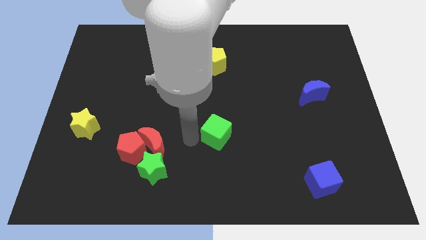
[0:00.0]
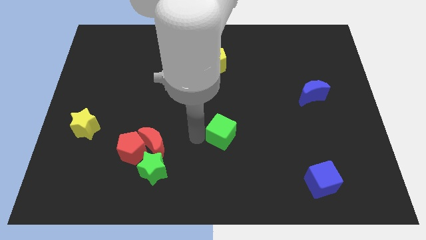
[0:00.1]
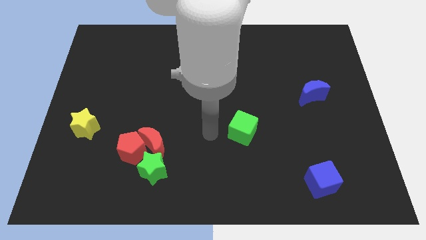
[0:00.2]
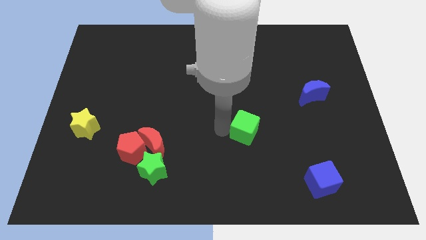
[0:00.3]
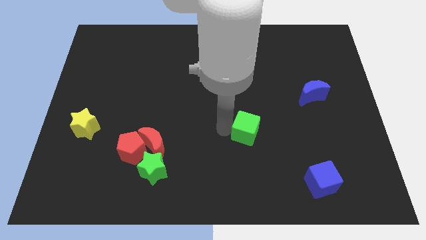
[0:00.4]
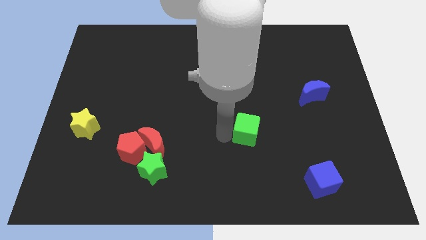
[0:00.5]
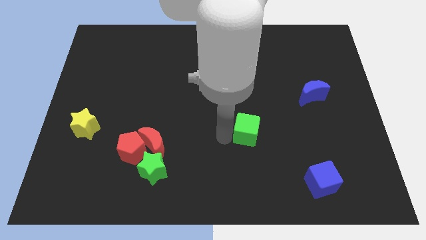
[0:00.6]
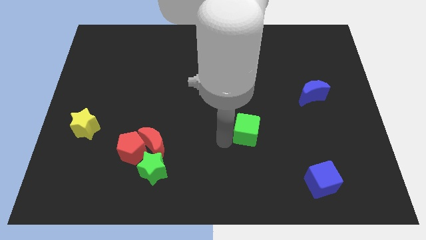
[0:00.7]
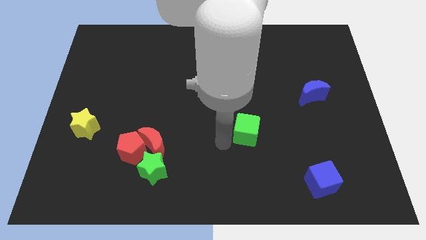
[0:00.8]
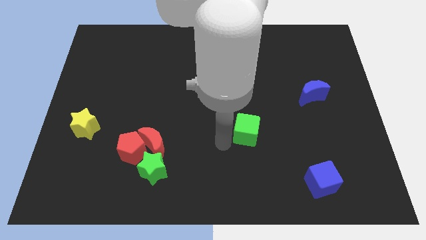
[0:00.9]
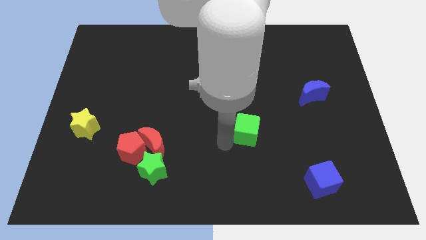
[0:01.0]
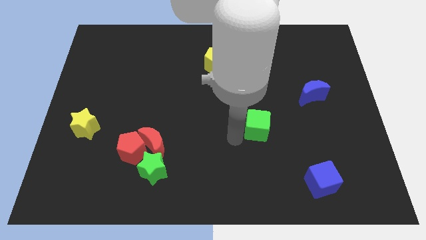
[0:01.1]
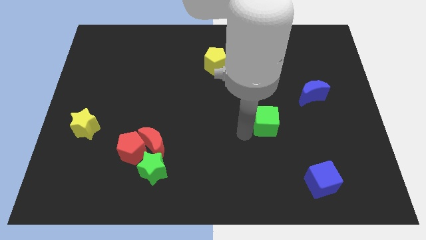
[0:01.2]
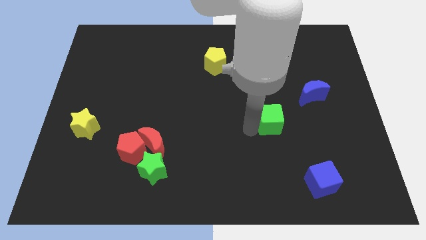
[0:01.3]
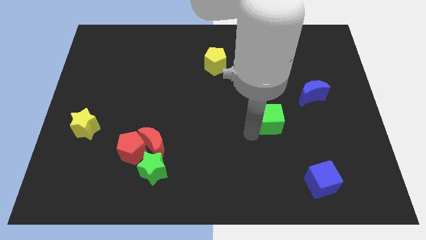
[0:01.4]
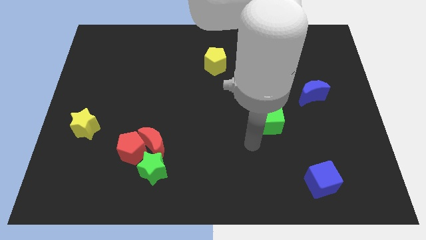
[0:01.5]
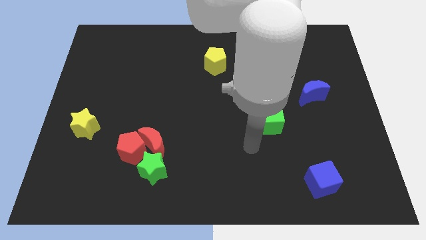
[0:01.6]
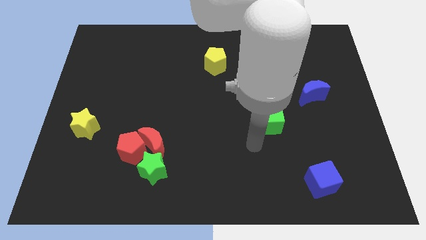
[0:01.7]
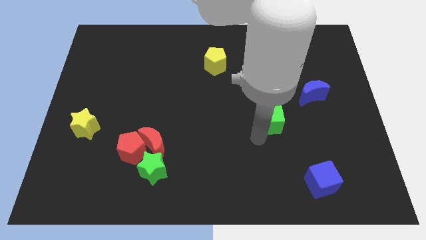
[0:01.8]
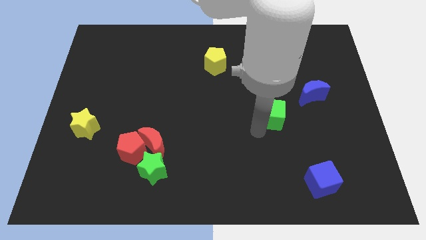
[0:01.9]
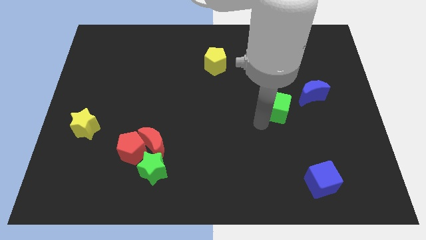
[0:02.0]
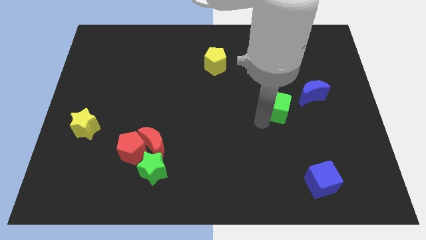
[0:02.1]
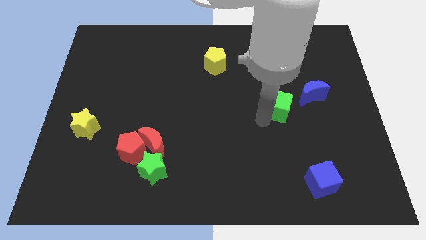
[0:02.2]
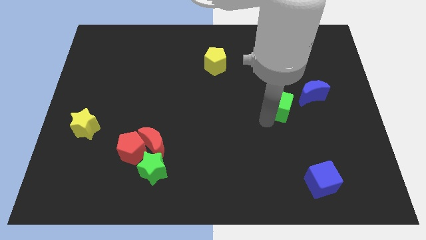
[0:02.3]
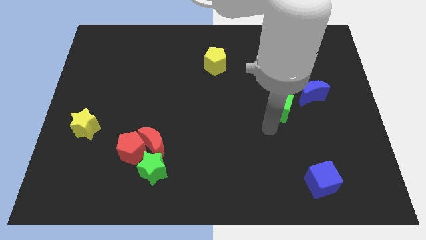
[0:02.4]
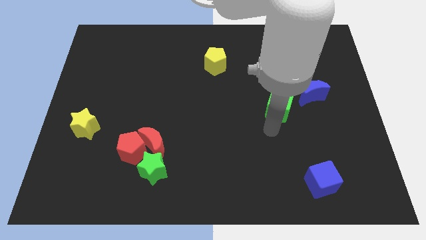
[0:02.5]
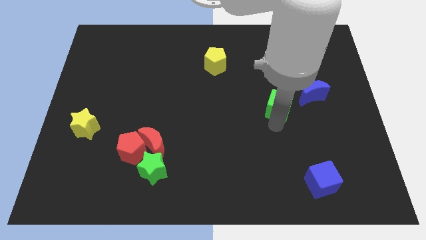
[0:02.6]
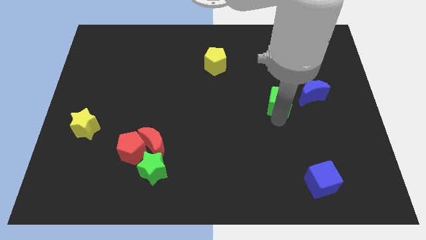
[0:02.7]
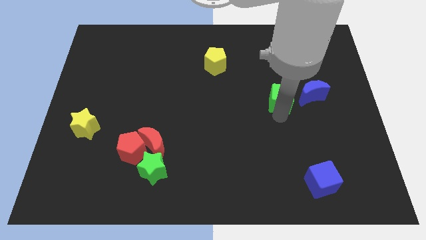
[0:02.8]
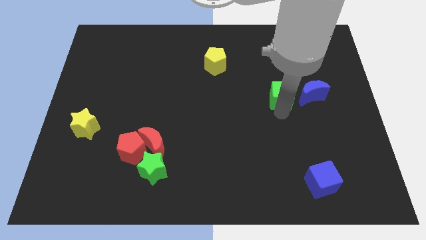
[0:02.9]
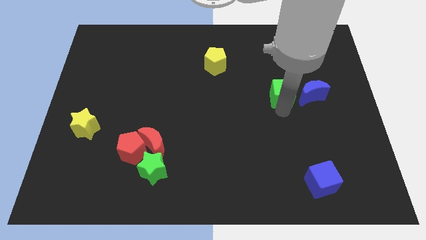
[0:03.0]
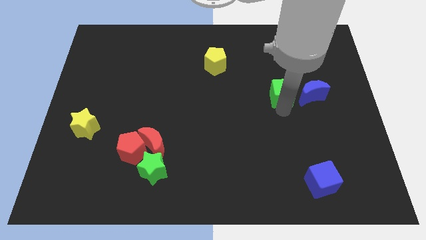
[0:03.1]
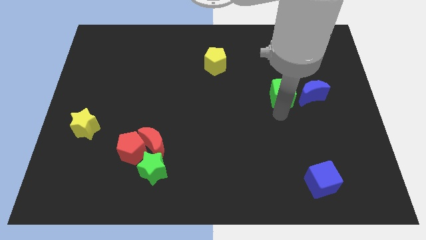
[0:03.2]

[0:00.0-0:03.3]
move the green cube to the bottom of the blue moon

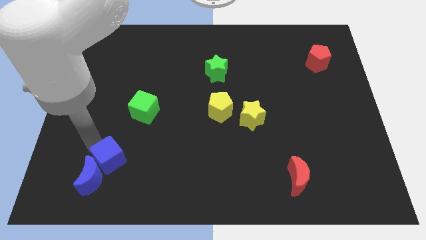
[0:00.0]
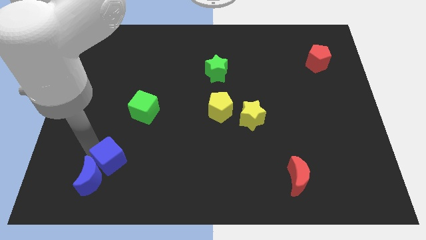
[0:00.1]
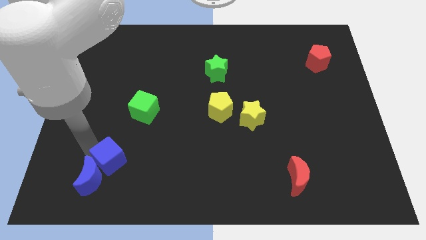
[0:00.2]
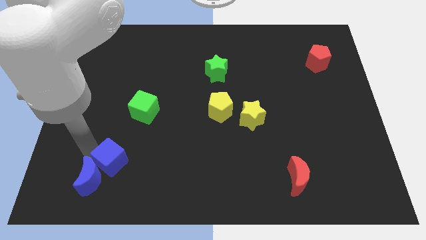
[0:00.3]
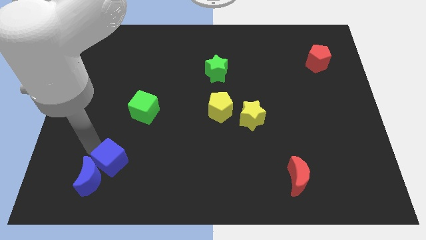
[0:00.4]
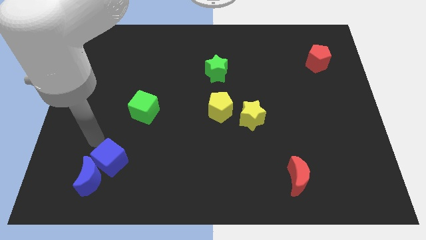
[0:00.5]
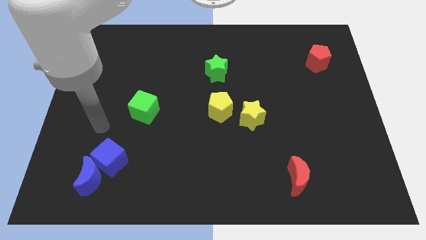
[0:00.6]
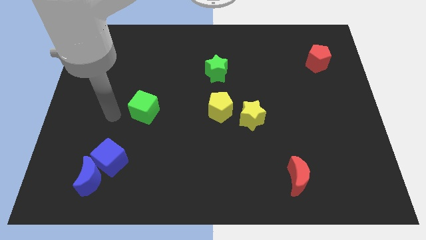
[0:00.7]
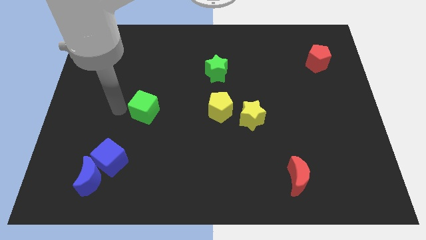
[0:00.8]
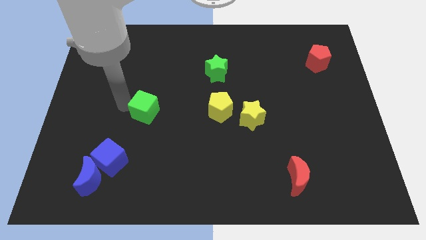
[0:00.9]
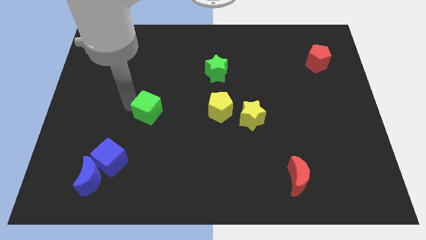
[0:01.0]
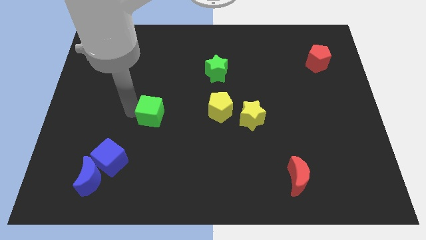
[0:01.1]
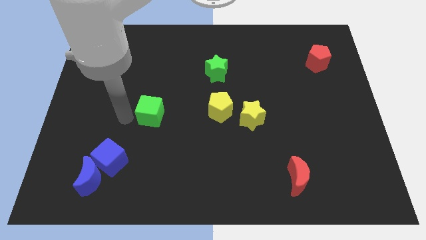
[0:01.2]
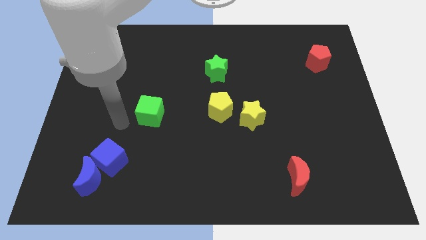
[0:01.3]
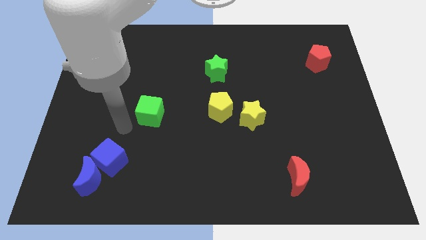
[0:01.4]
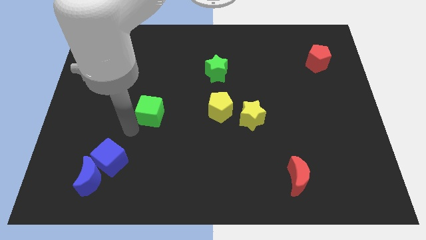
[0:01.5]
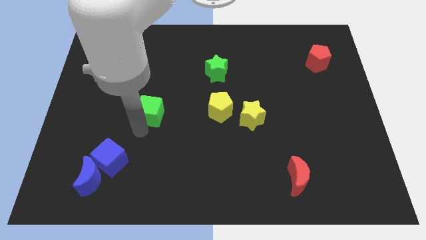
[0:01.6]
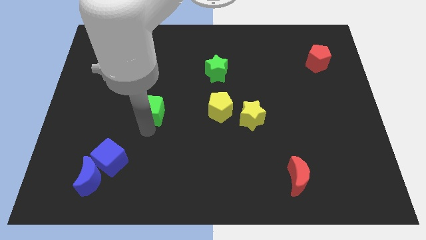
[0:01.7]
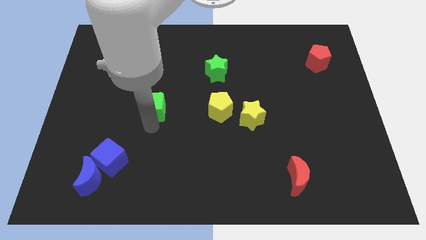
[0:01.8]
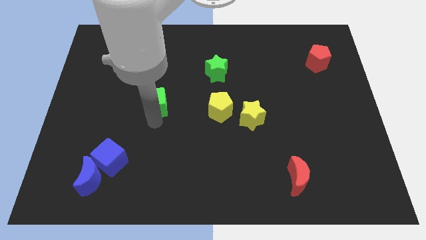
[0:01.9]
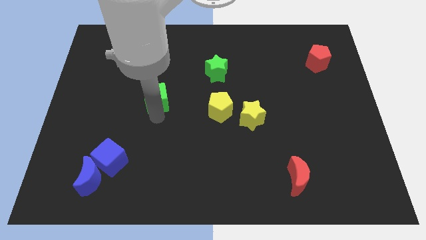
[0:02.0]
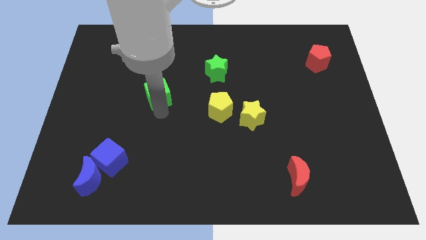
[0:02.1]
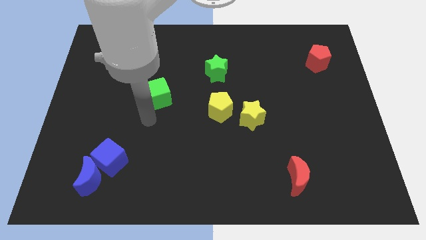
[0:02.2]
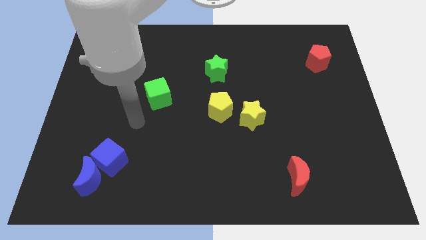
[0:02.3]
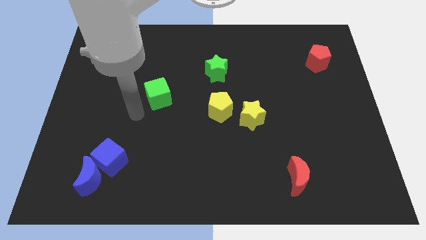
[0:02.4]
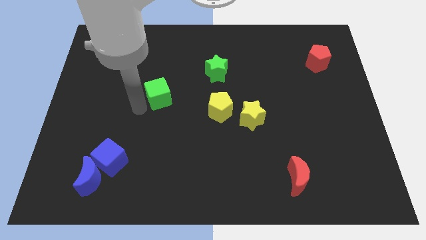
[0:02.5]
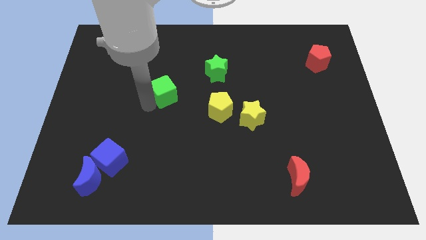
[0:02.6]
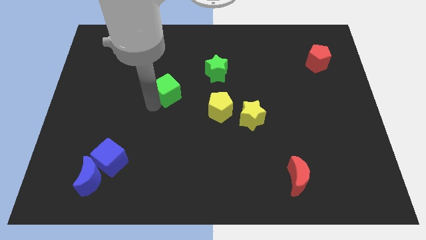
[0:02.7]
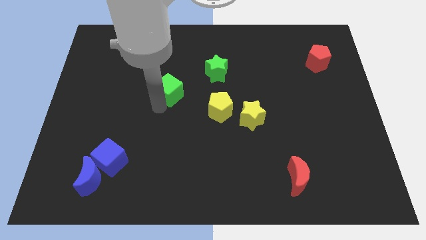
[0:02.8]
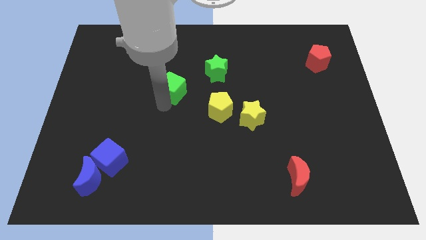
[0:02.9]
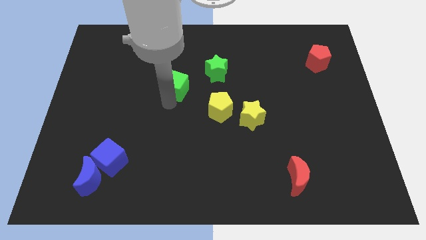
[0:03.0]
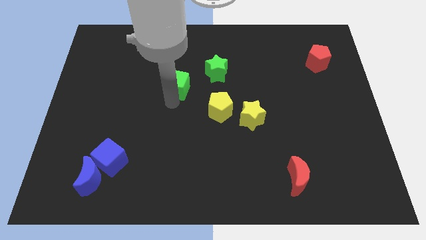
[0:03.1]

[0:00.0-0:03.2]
slide the green cube towards the green star

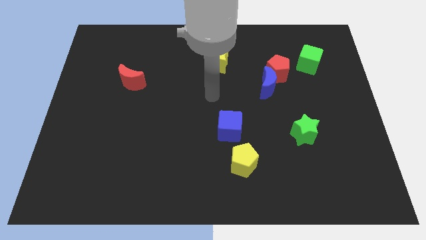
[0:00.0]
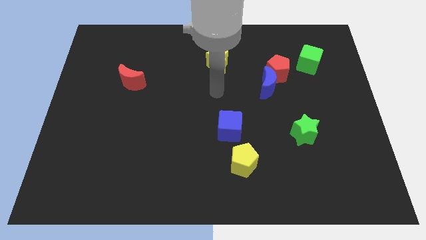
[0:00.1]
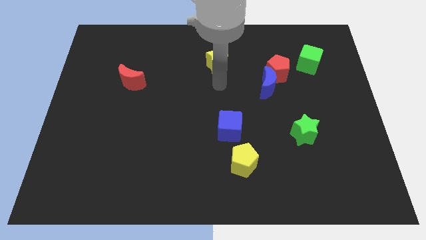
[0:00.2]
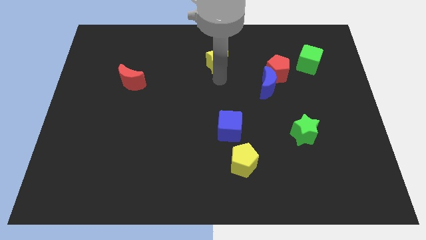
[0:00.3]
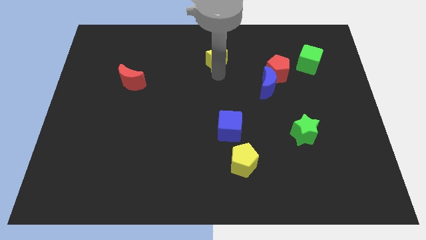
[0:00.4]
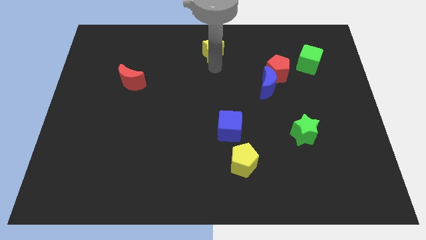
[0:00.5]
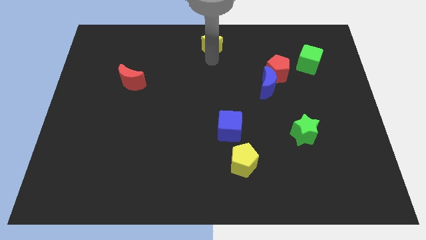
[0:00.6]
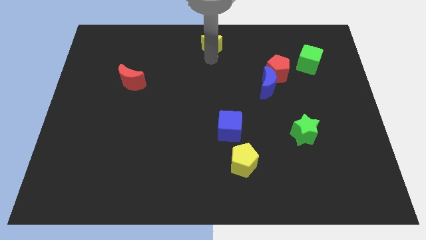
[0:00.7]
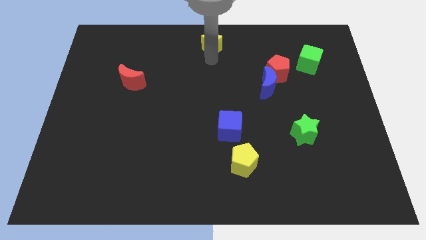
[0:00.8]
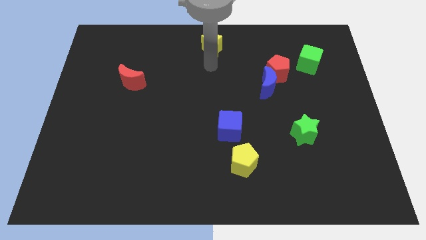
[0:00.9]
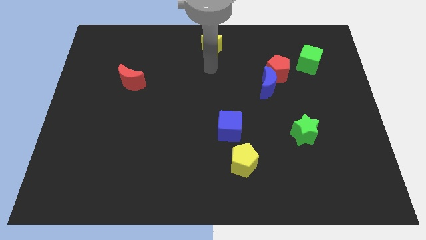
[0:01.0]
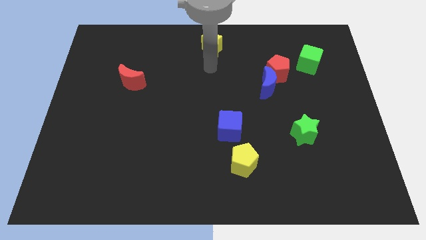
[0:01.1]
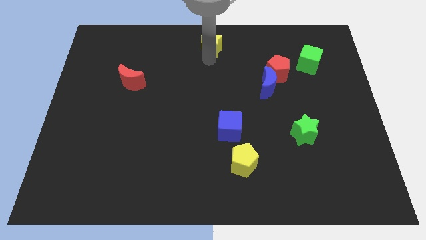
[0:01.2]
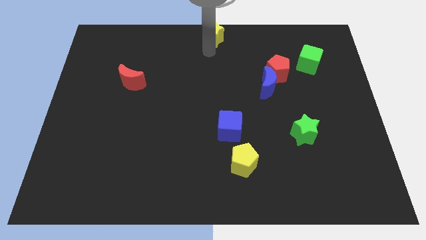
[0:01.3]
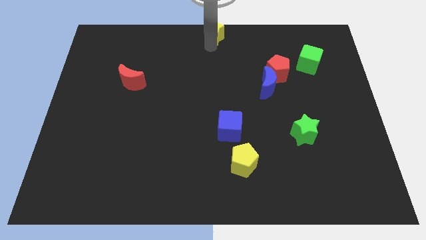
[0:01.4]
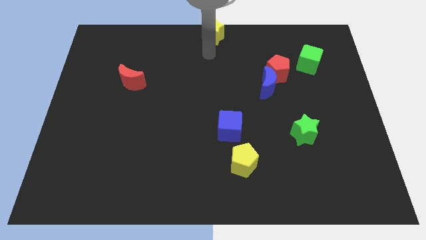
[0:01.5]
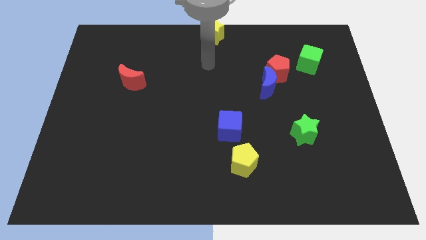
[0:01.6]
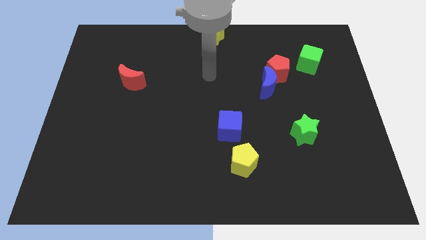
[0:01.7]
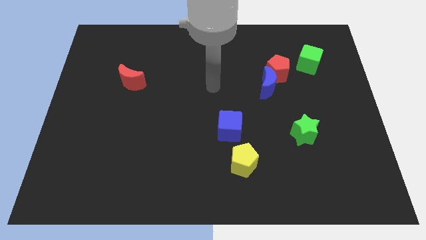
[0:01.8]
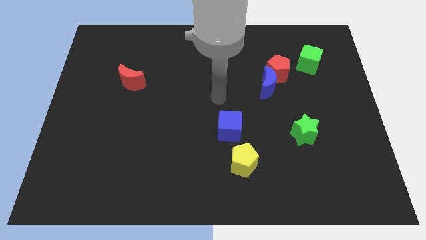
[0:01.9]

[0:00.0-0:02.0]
move the yellow star towards the top center

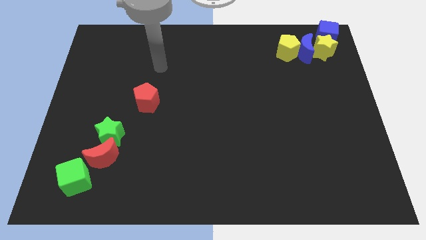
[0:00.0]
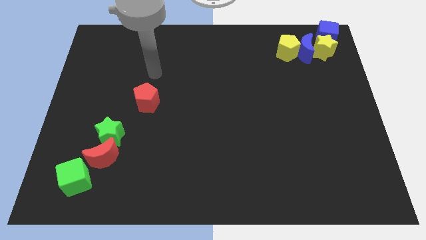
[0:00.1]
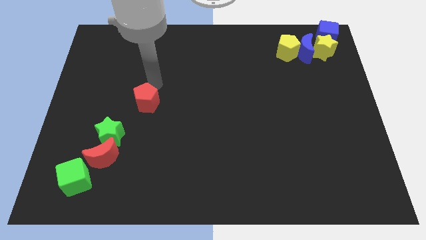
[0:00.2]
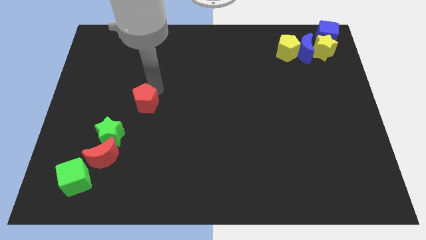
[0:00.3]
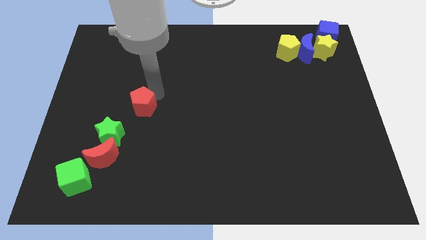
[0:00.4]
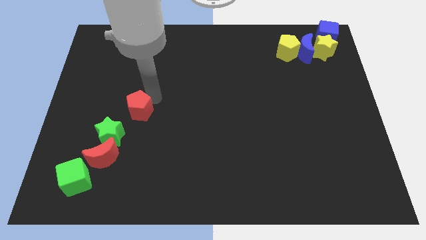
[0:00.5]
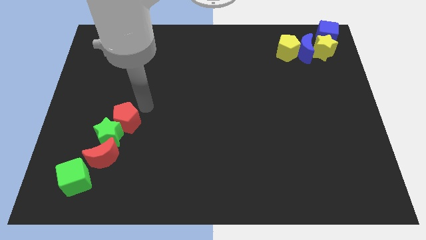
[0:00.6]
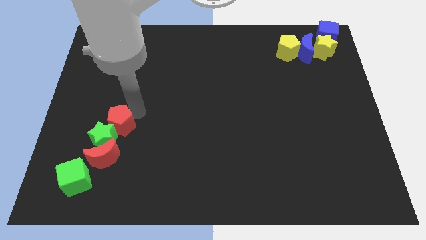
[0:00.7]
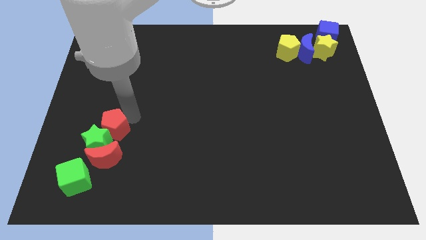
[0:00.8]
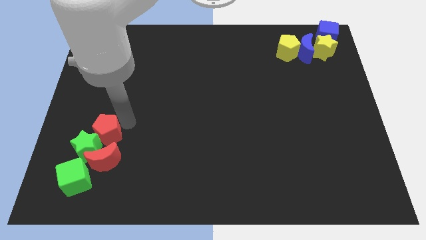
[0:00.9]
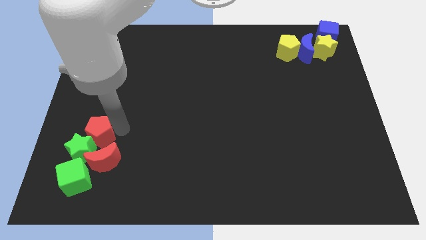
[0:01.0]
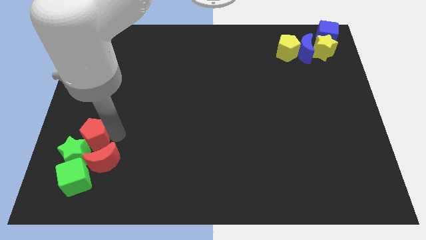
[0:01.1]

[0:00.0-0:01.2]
push the red pentagon into the green star
